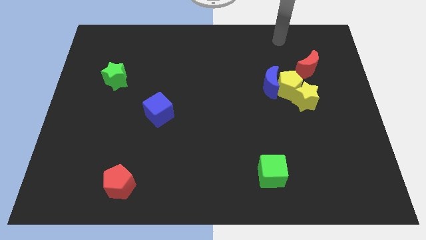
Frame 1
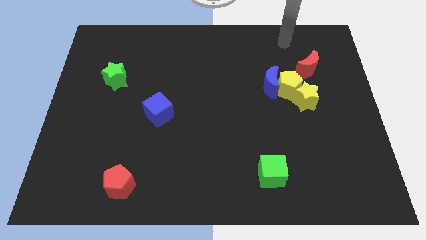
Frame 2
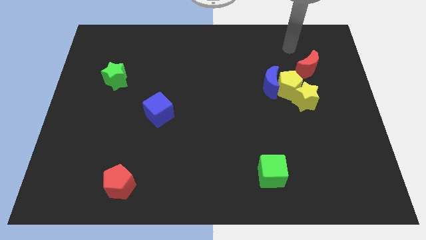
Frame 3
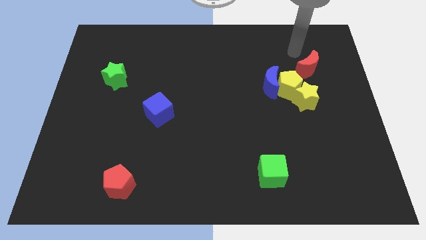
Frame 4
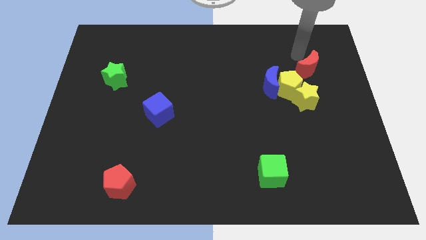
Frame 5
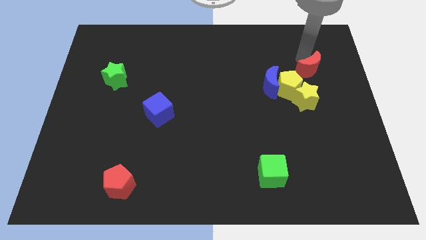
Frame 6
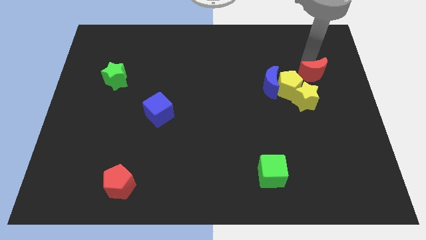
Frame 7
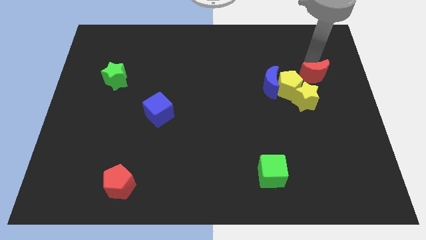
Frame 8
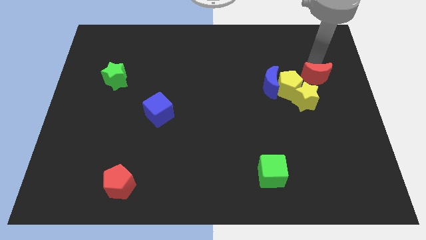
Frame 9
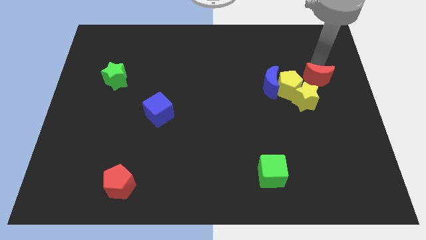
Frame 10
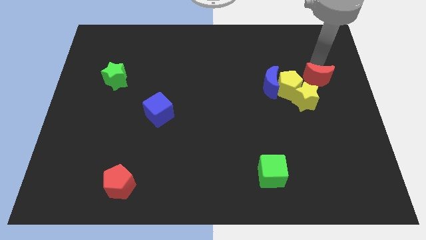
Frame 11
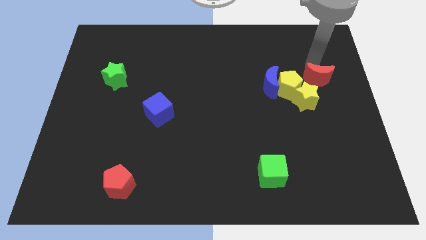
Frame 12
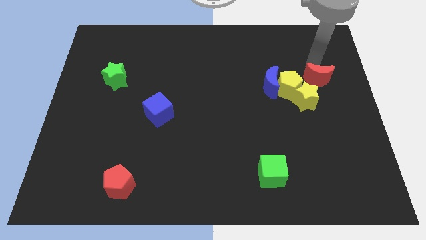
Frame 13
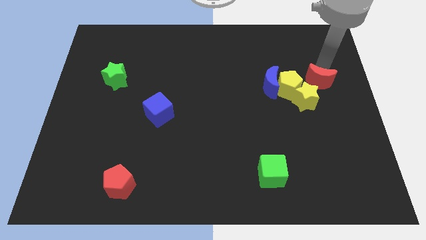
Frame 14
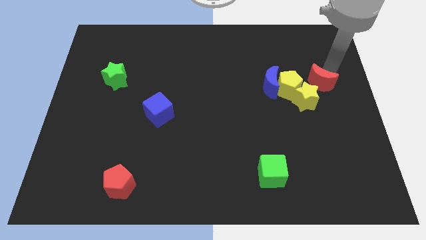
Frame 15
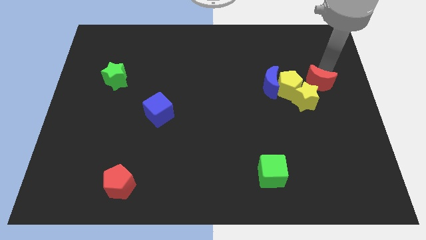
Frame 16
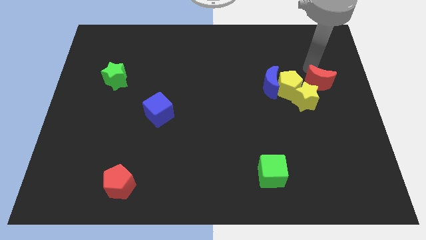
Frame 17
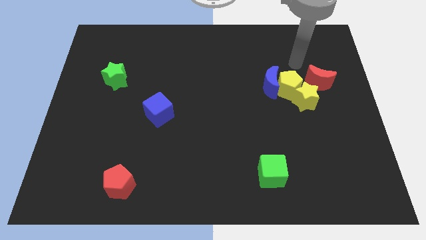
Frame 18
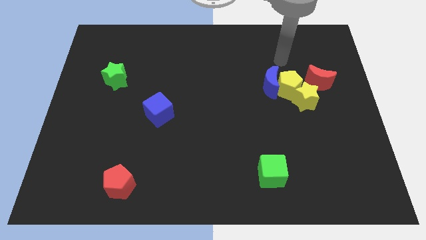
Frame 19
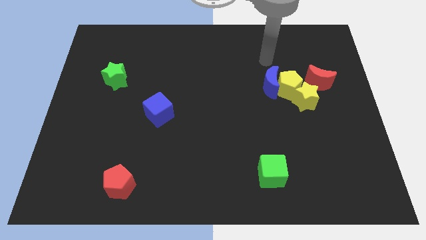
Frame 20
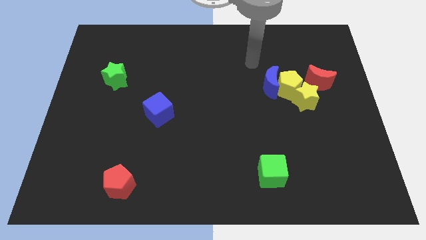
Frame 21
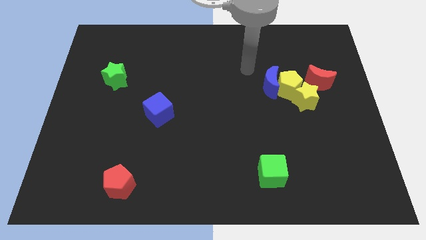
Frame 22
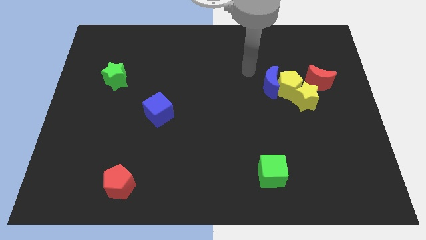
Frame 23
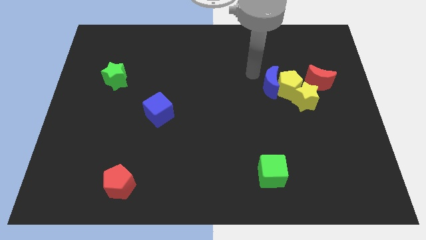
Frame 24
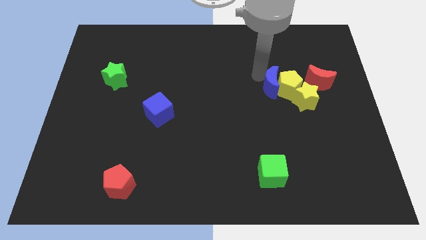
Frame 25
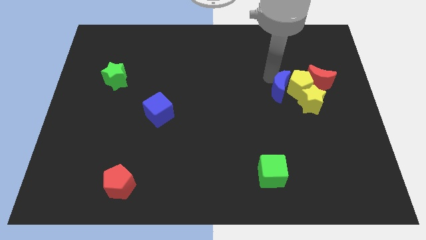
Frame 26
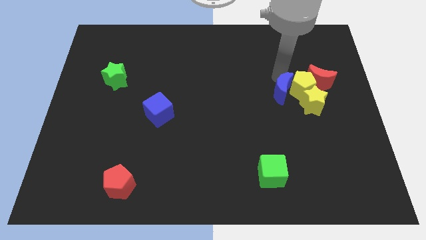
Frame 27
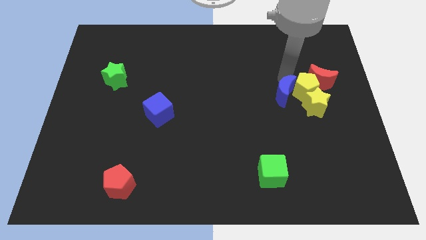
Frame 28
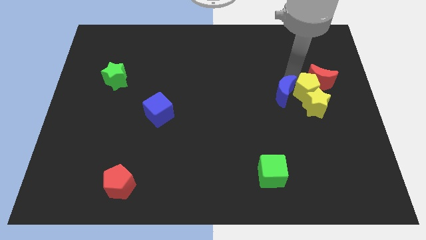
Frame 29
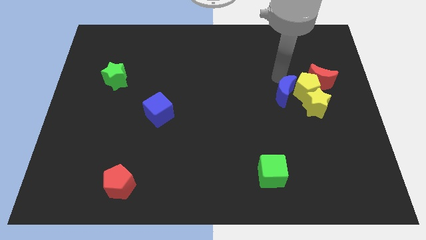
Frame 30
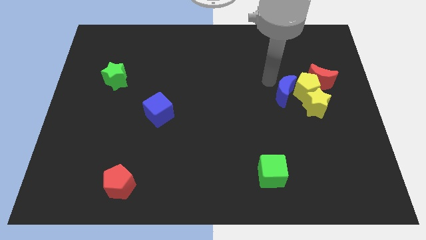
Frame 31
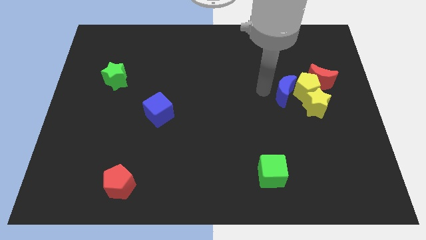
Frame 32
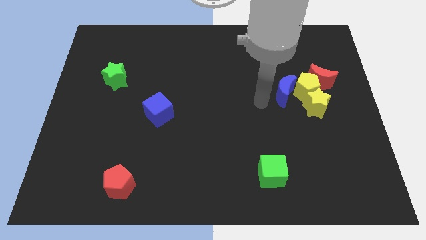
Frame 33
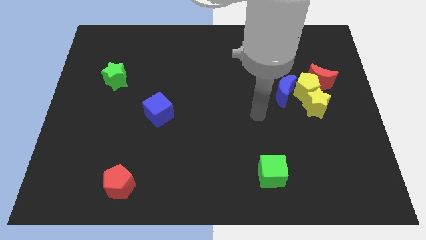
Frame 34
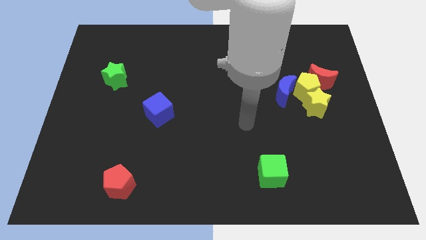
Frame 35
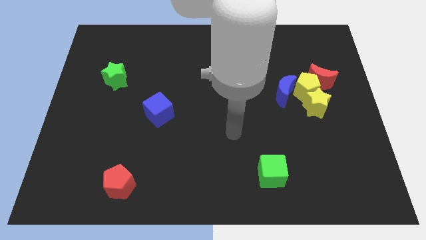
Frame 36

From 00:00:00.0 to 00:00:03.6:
push the red moon blue moon and yellow blocks to right

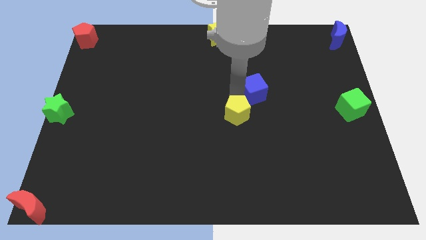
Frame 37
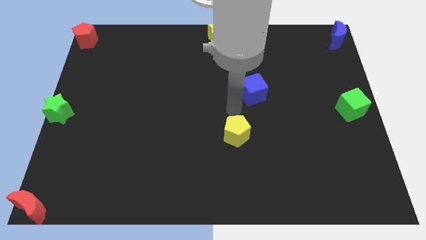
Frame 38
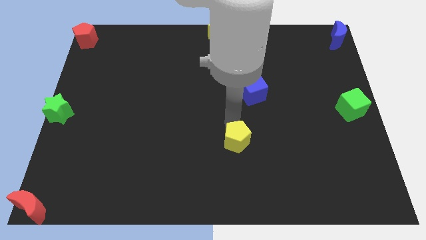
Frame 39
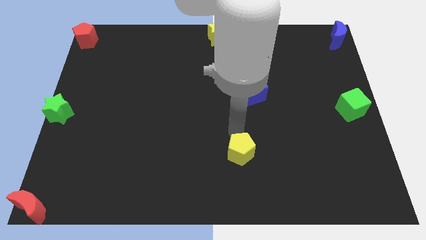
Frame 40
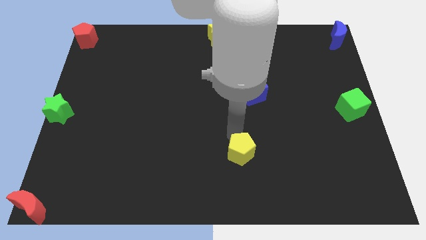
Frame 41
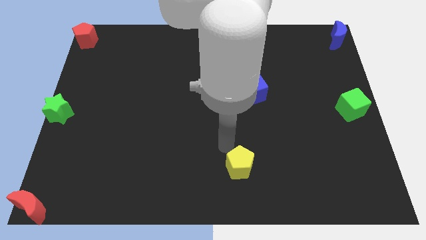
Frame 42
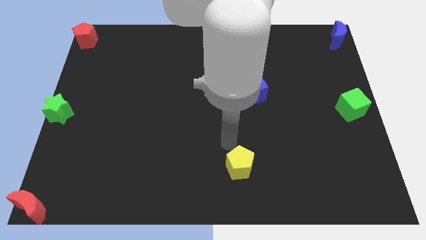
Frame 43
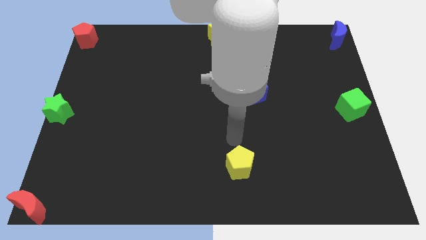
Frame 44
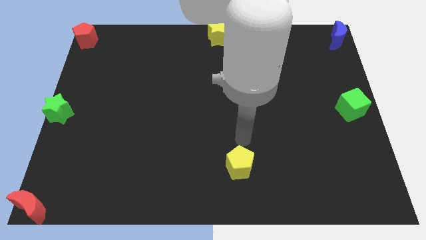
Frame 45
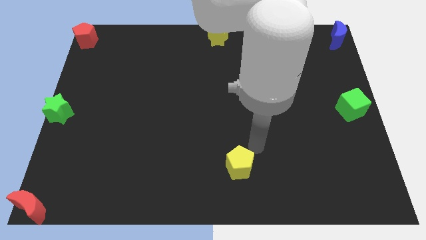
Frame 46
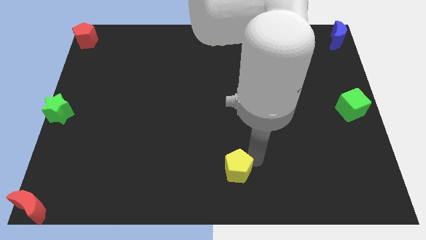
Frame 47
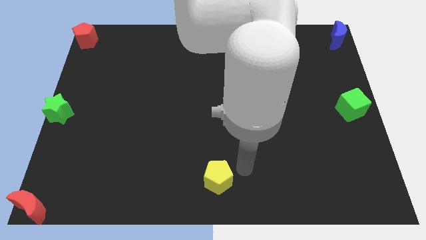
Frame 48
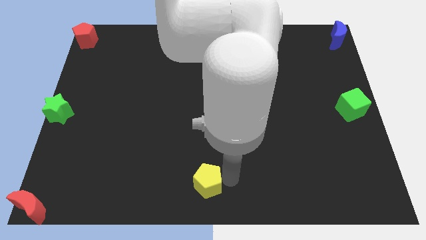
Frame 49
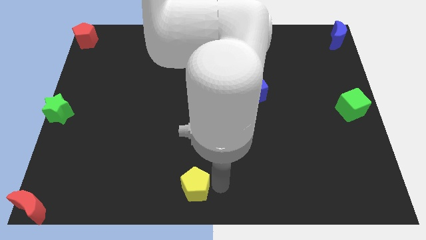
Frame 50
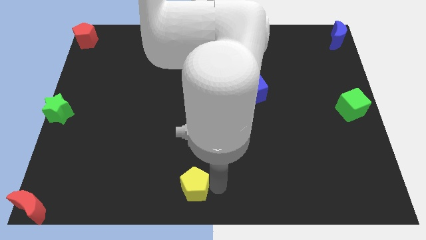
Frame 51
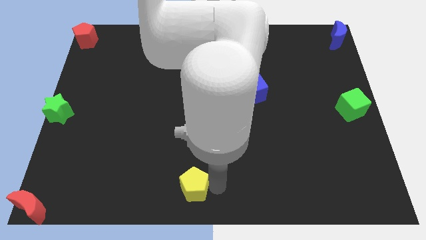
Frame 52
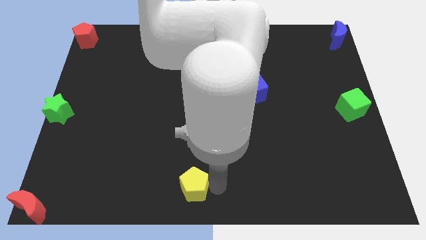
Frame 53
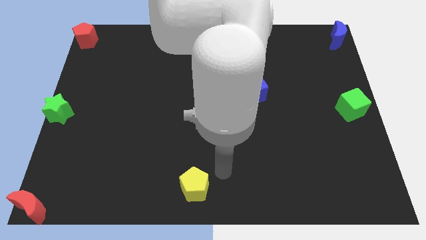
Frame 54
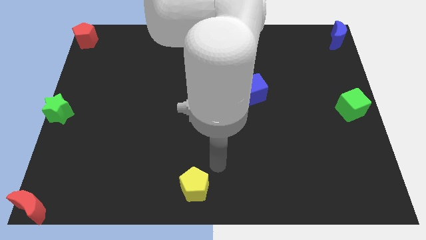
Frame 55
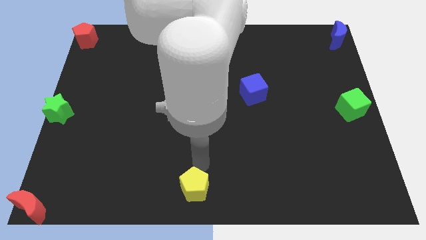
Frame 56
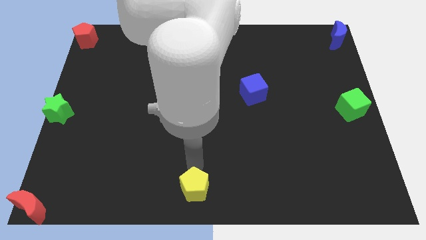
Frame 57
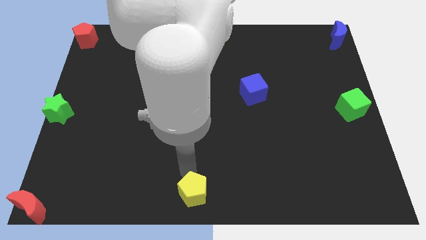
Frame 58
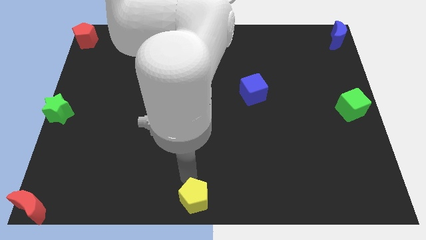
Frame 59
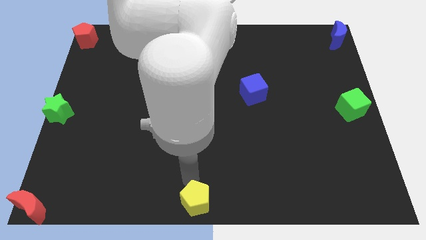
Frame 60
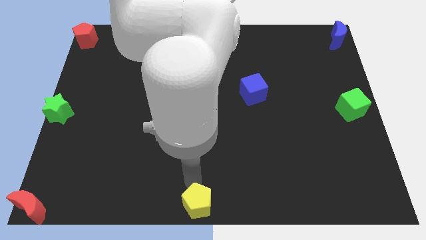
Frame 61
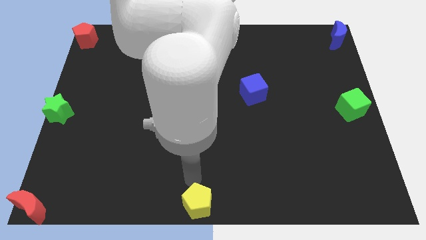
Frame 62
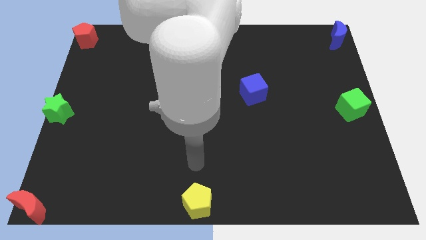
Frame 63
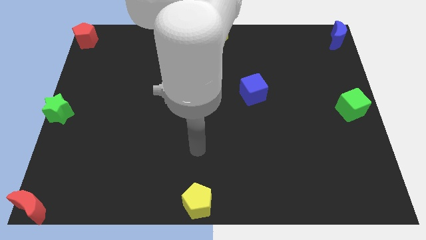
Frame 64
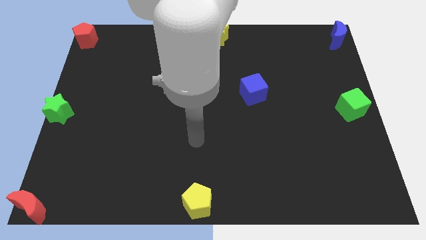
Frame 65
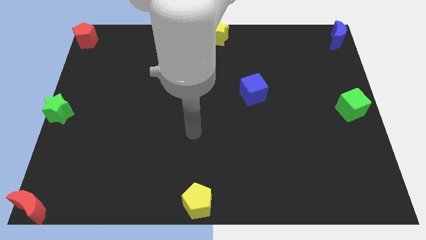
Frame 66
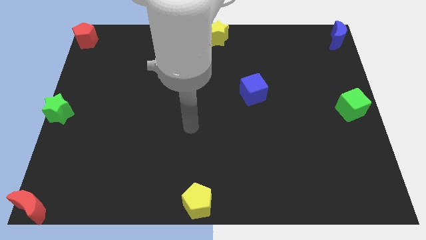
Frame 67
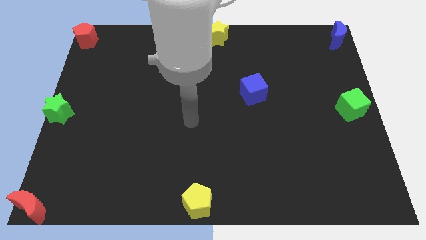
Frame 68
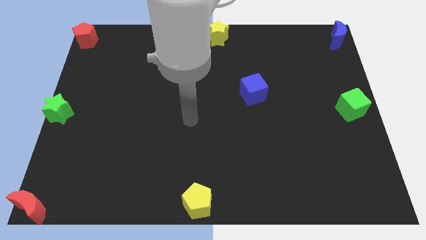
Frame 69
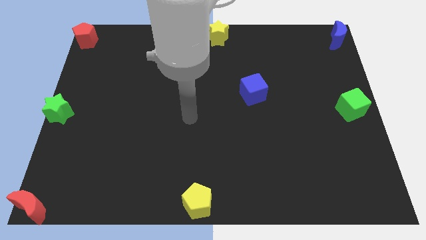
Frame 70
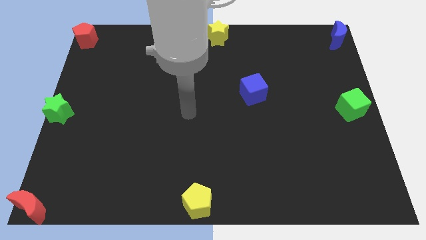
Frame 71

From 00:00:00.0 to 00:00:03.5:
push the yellow pentagon to the bottom center of the board

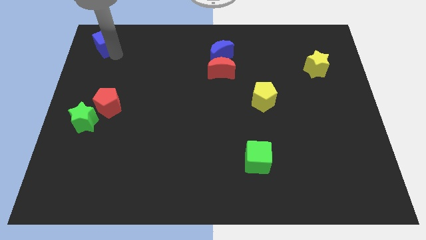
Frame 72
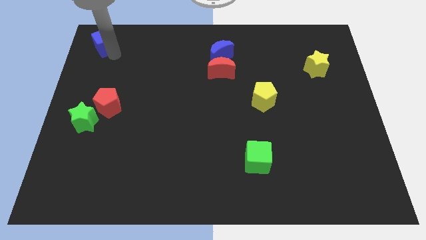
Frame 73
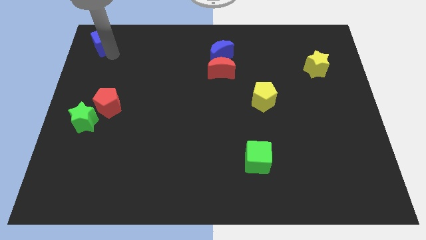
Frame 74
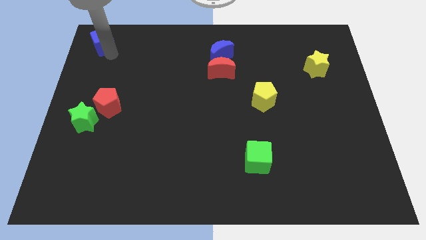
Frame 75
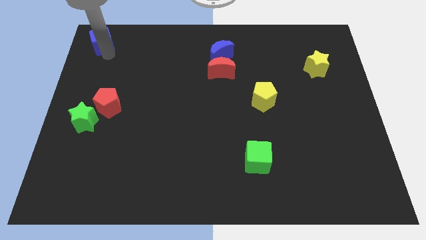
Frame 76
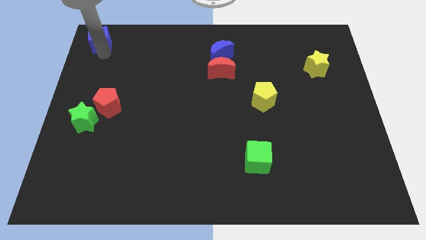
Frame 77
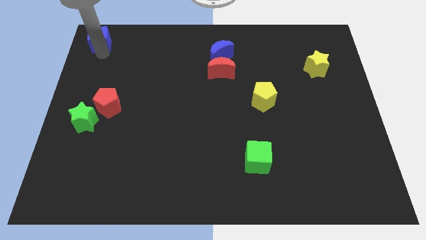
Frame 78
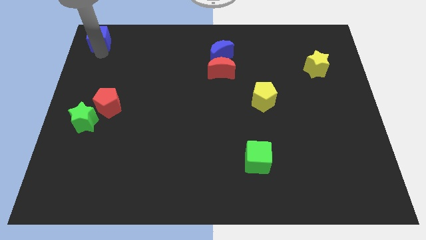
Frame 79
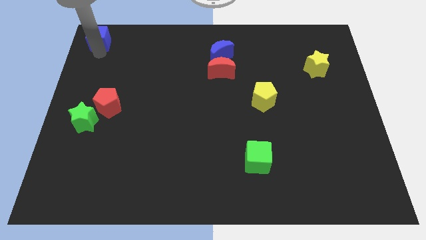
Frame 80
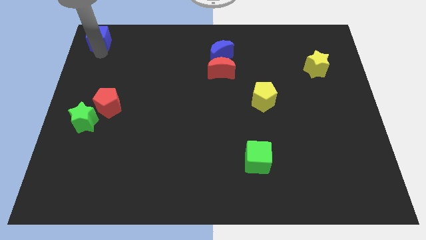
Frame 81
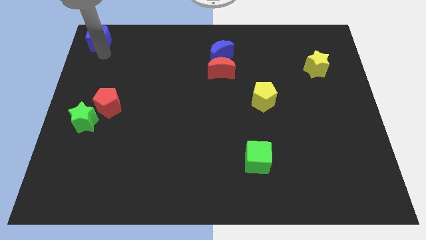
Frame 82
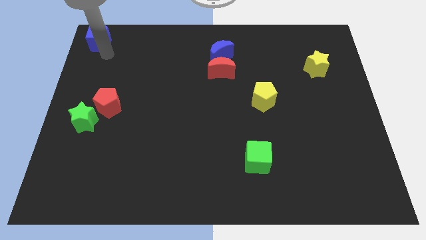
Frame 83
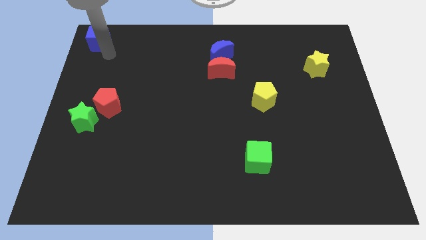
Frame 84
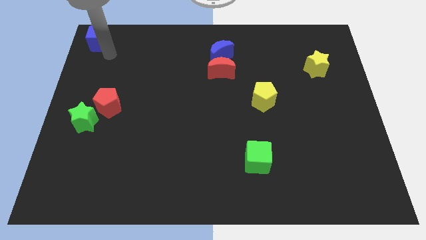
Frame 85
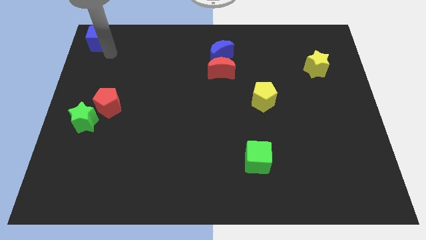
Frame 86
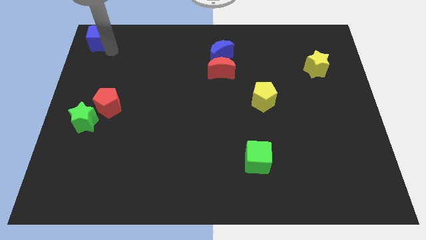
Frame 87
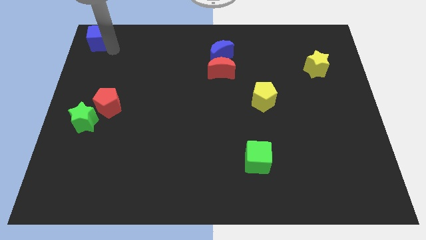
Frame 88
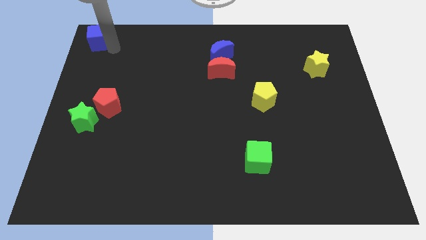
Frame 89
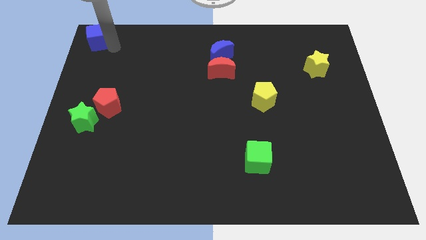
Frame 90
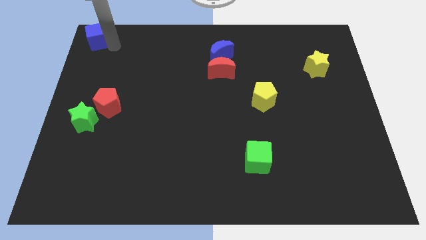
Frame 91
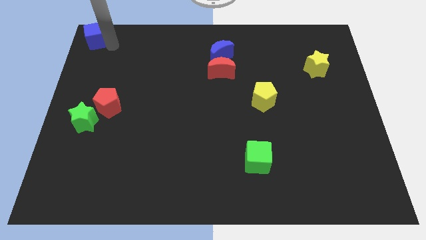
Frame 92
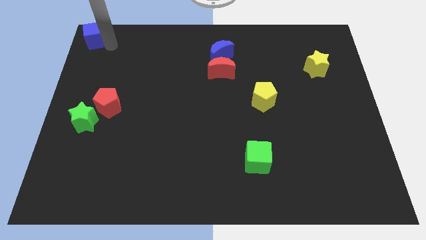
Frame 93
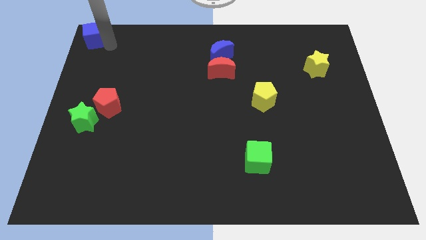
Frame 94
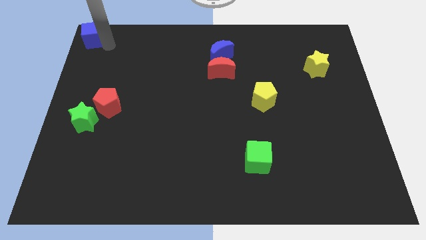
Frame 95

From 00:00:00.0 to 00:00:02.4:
place the blue cube at the top left corner of the board
